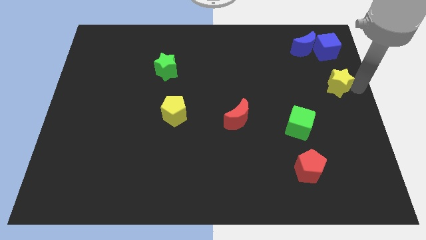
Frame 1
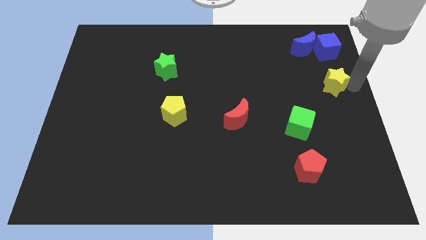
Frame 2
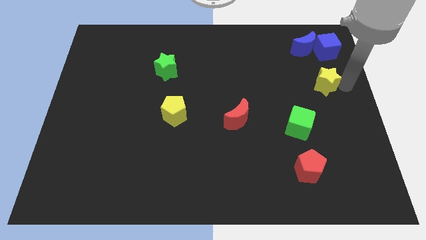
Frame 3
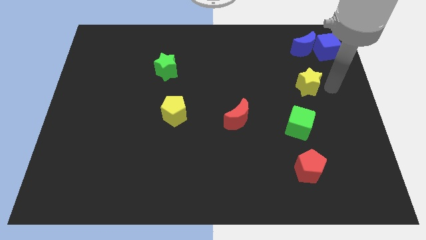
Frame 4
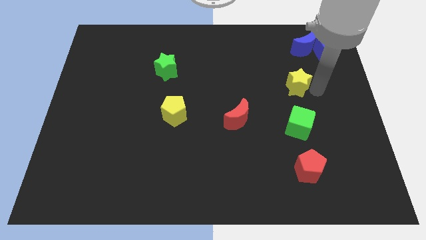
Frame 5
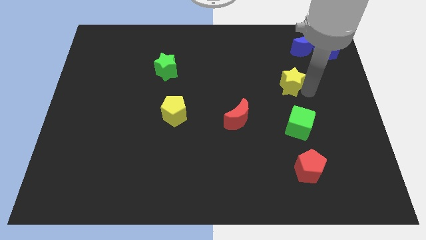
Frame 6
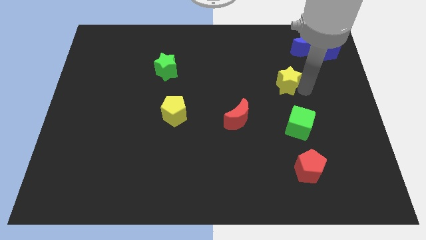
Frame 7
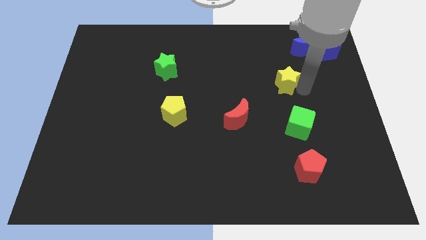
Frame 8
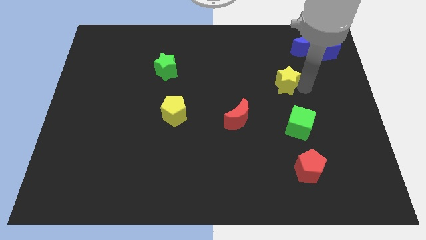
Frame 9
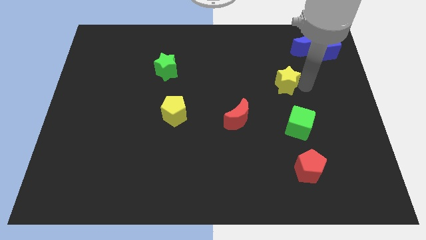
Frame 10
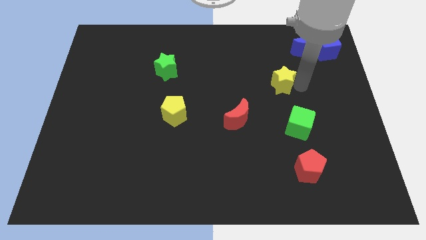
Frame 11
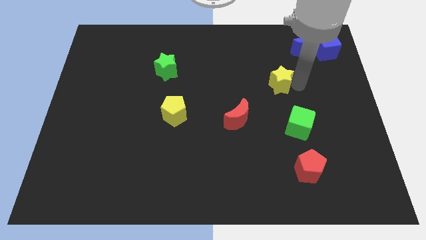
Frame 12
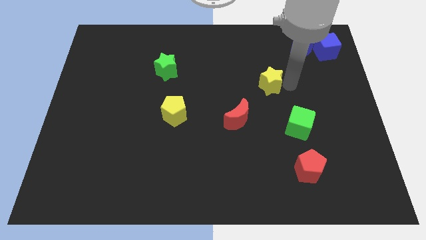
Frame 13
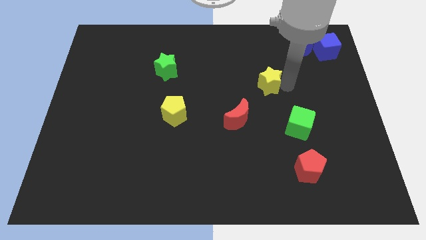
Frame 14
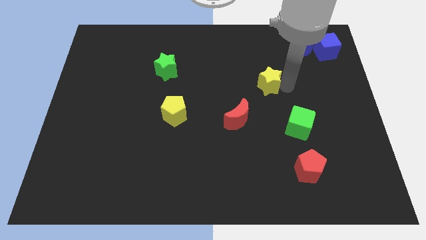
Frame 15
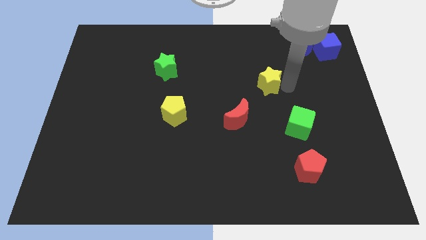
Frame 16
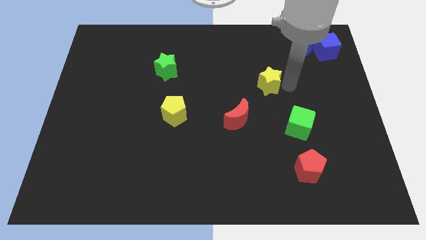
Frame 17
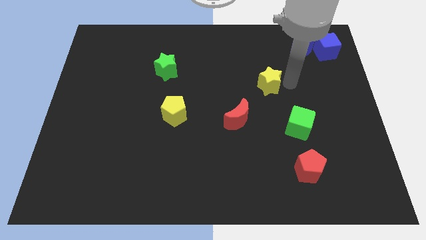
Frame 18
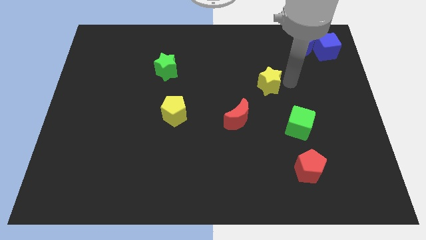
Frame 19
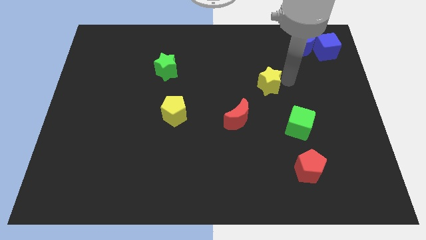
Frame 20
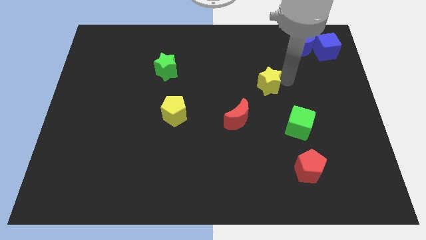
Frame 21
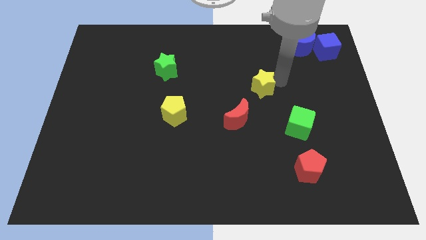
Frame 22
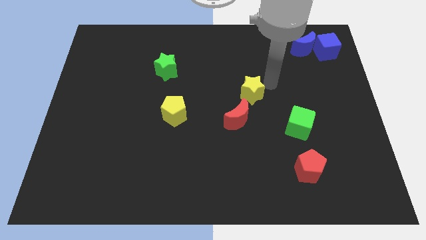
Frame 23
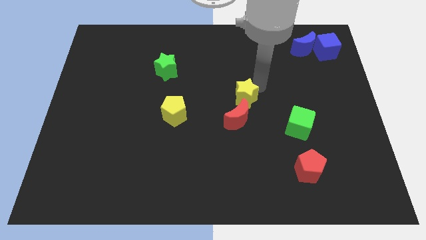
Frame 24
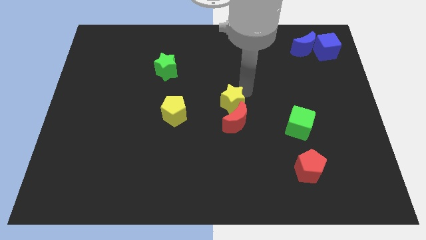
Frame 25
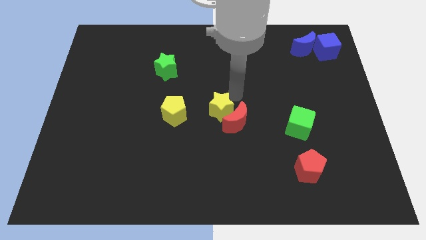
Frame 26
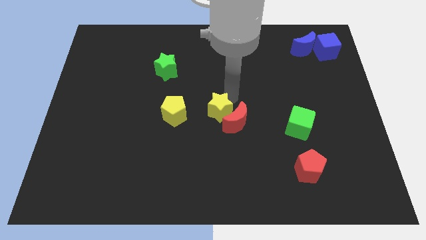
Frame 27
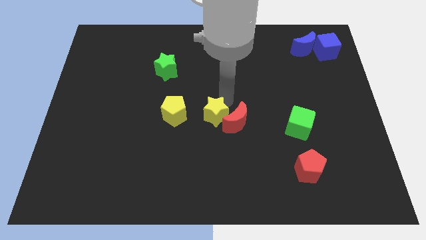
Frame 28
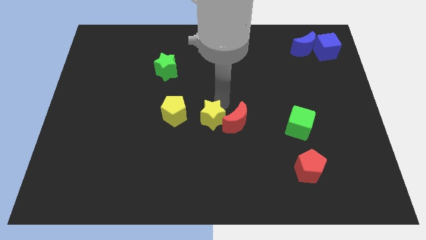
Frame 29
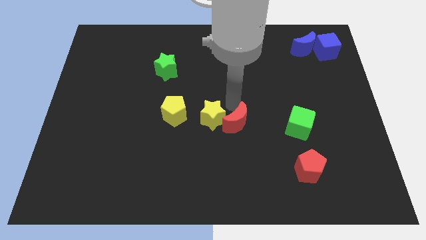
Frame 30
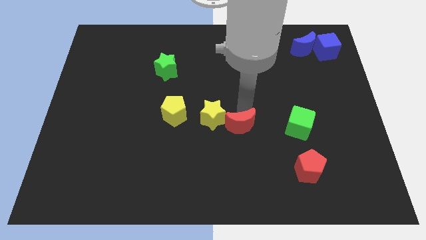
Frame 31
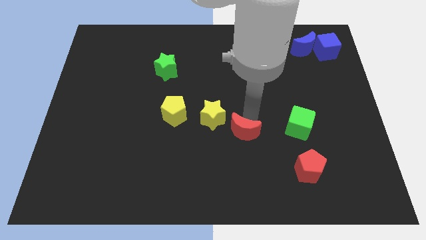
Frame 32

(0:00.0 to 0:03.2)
move the yellow star to the left of the red crescent

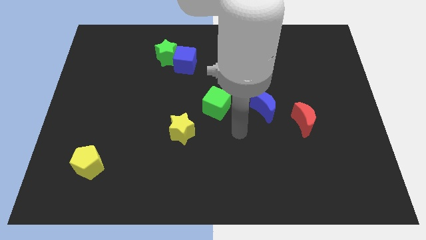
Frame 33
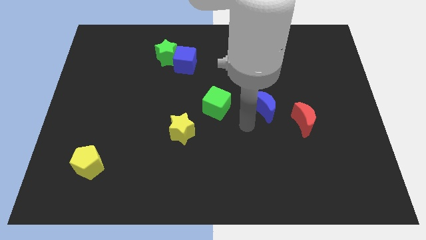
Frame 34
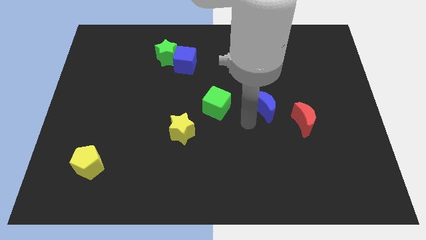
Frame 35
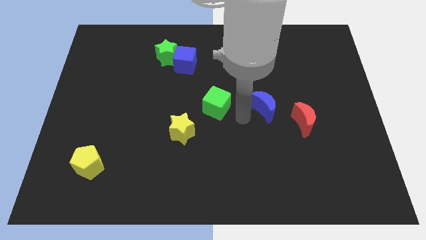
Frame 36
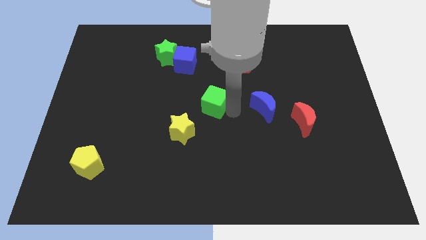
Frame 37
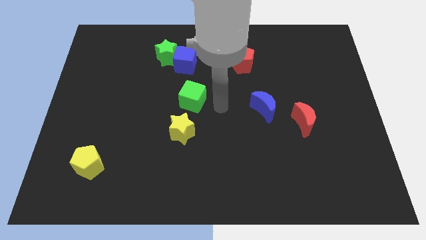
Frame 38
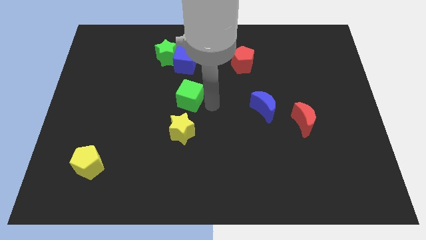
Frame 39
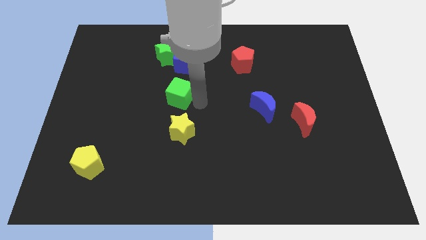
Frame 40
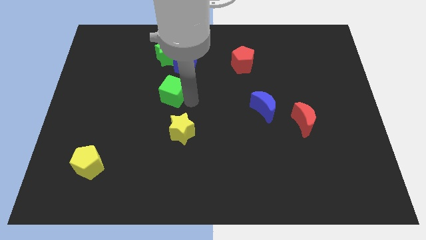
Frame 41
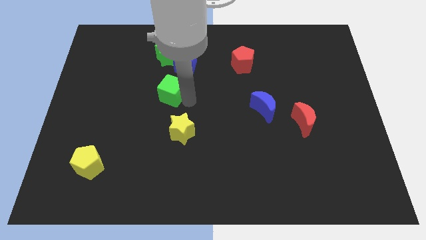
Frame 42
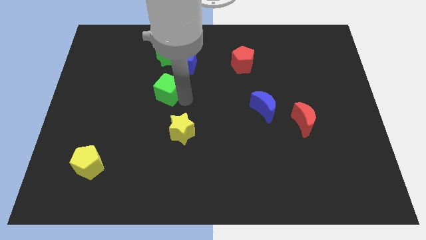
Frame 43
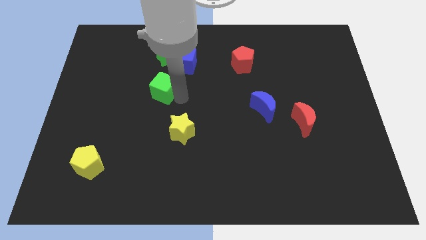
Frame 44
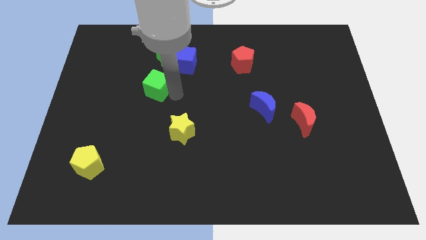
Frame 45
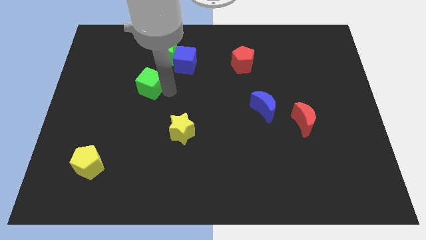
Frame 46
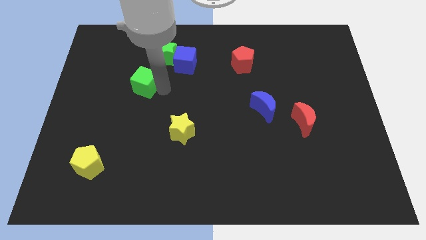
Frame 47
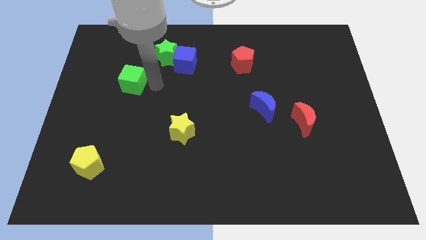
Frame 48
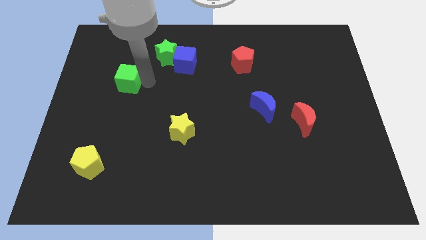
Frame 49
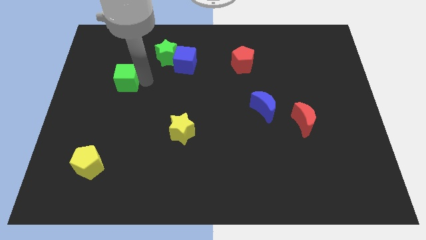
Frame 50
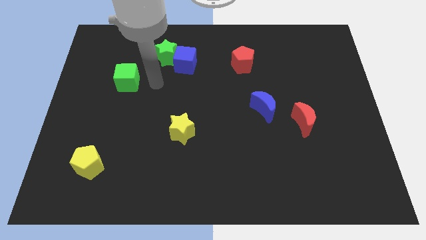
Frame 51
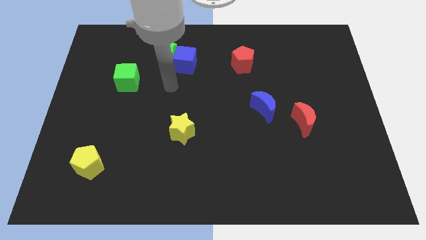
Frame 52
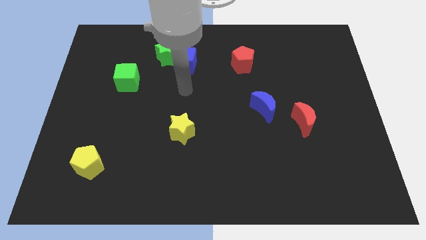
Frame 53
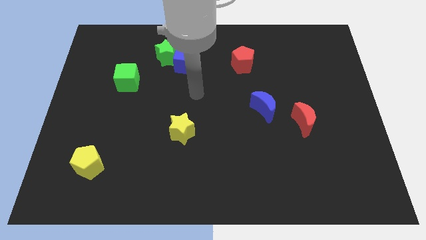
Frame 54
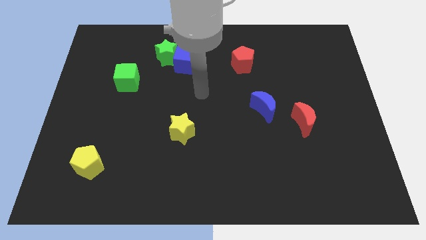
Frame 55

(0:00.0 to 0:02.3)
move the green cube diagonally to the green star

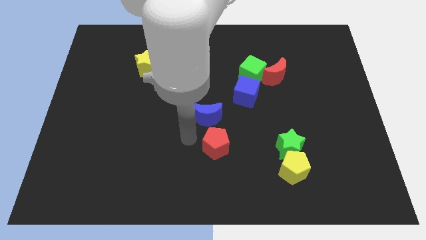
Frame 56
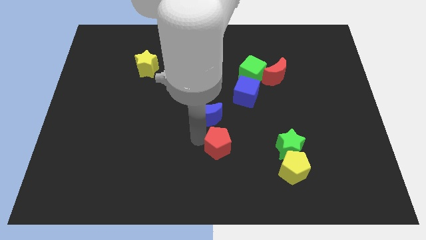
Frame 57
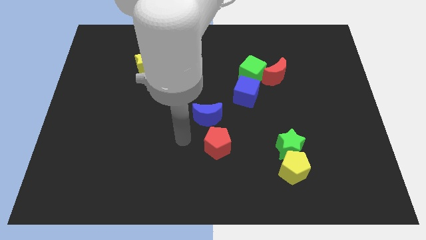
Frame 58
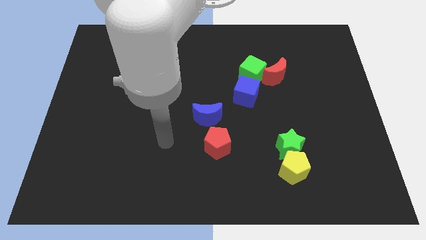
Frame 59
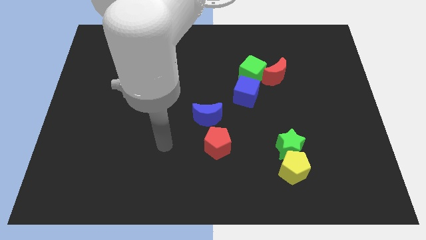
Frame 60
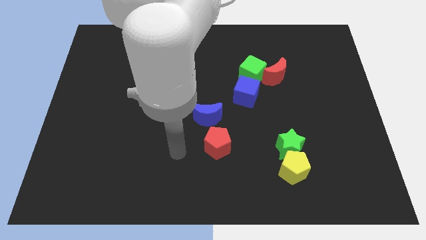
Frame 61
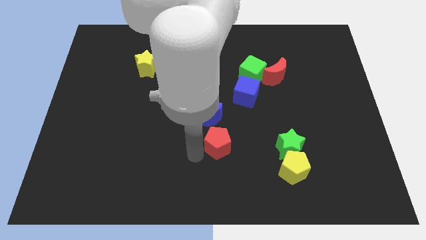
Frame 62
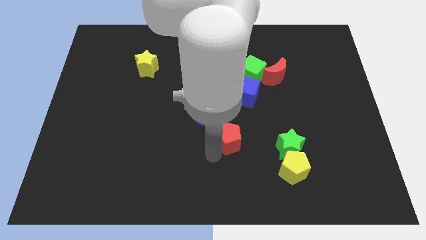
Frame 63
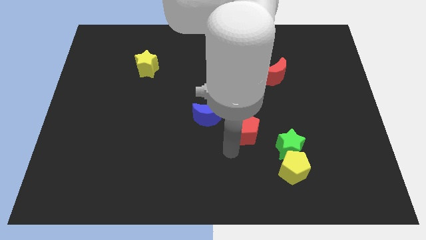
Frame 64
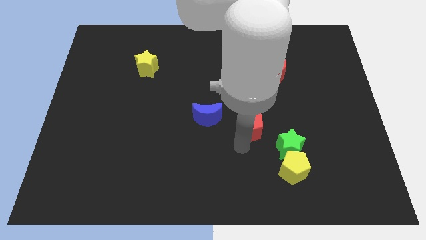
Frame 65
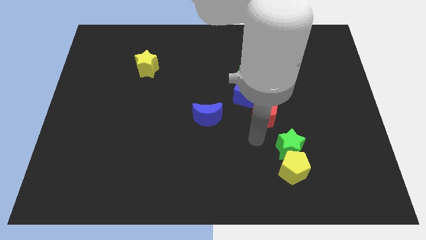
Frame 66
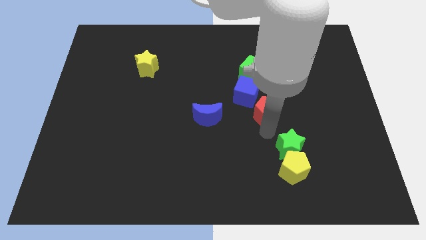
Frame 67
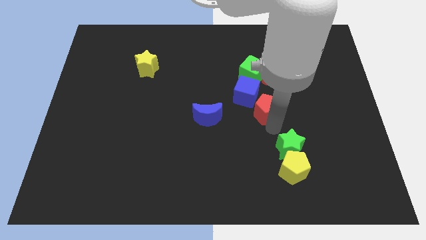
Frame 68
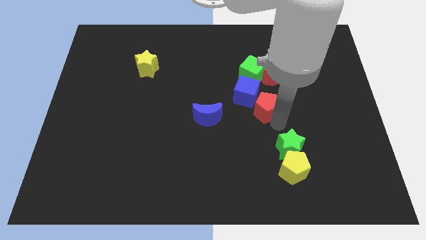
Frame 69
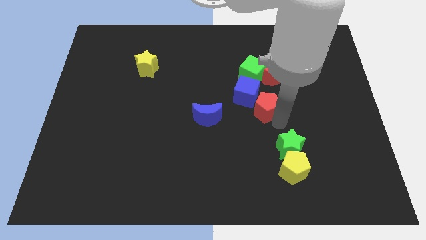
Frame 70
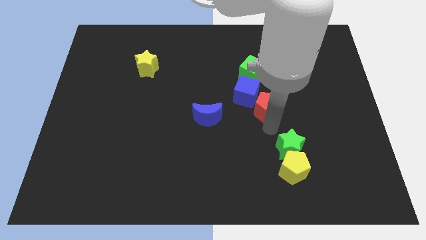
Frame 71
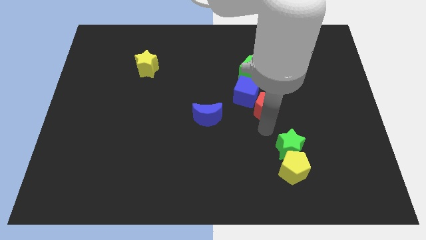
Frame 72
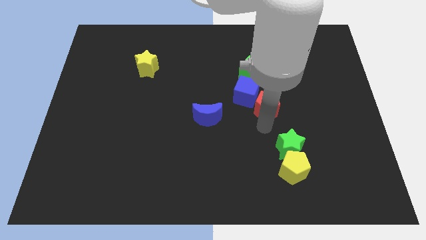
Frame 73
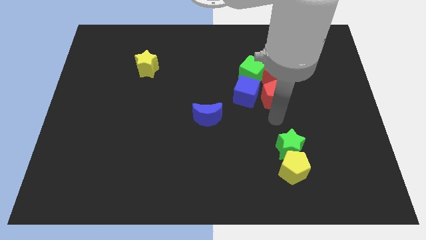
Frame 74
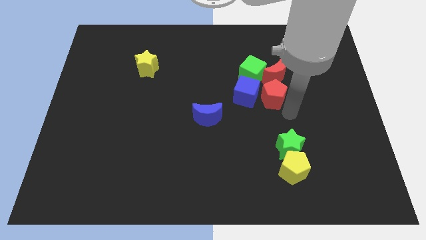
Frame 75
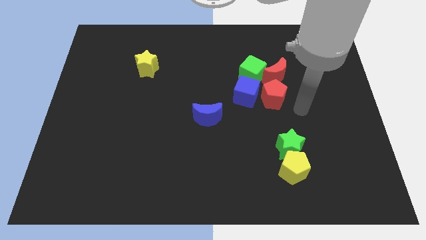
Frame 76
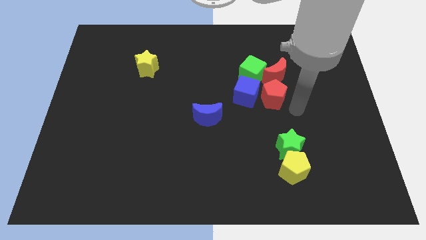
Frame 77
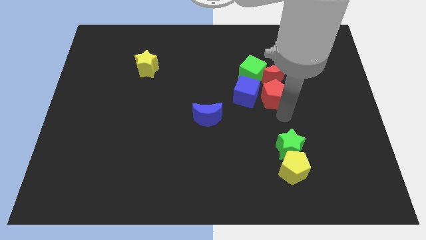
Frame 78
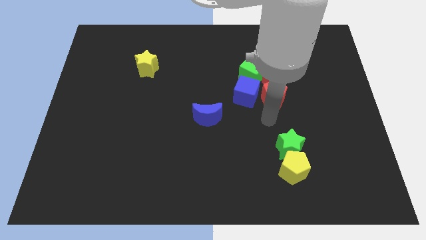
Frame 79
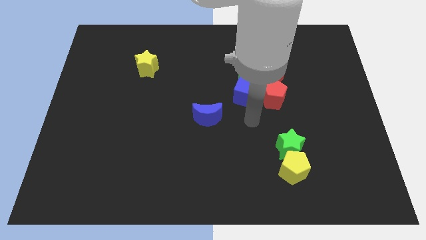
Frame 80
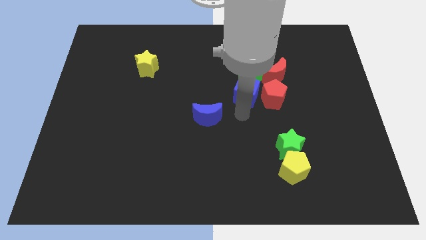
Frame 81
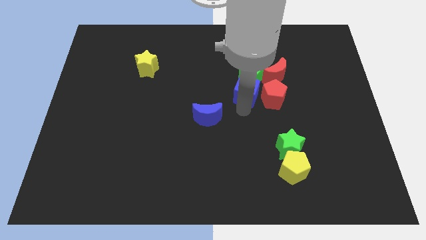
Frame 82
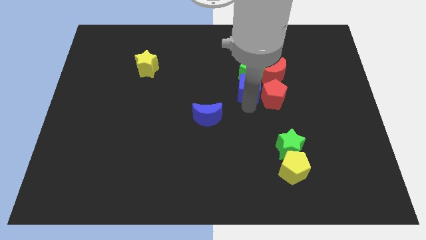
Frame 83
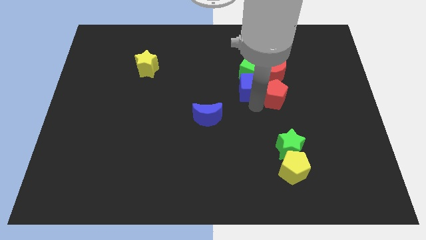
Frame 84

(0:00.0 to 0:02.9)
place the red pentagon below the red moon

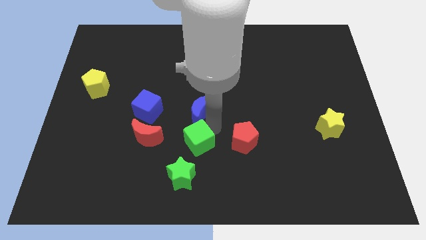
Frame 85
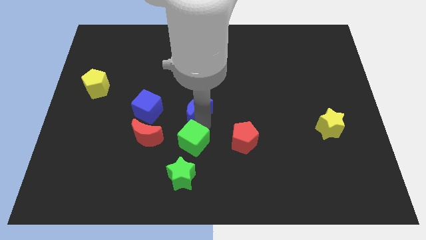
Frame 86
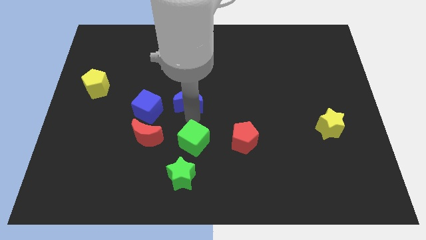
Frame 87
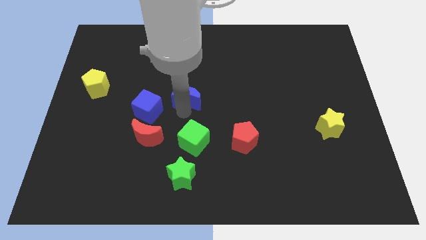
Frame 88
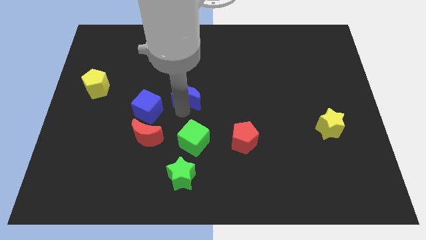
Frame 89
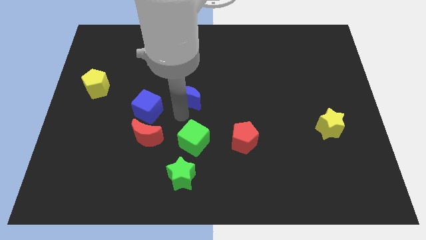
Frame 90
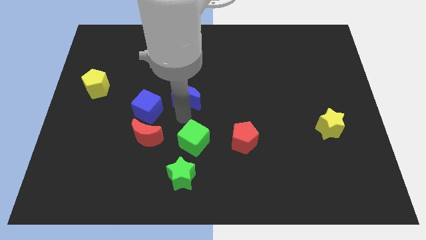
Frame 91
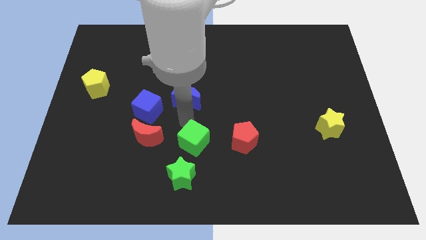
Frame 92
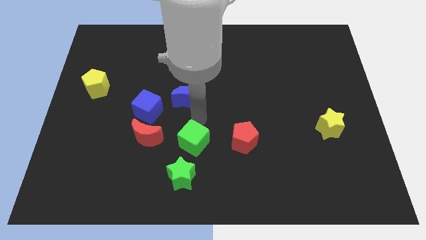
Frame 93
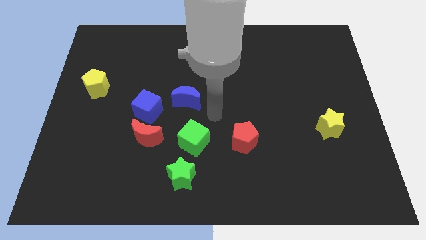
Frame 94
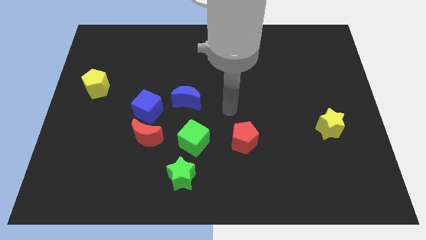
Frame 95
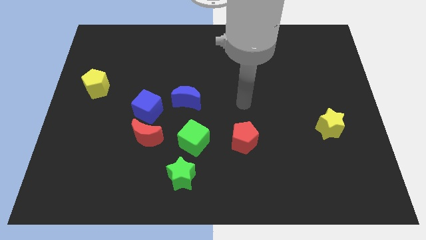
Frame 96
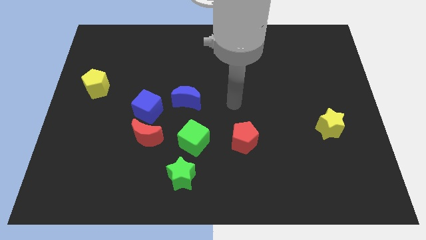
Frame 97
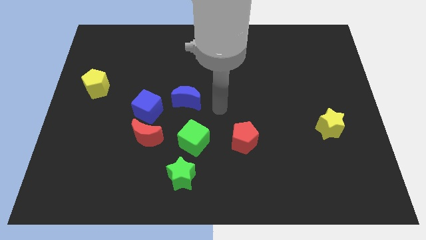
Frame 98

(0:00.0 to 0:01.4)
place the blue moon to the right side of blue cube
